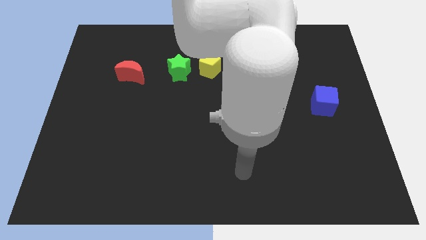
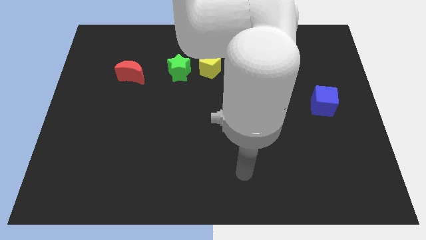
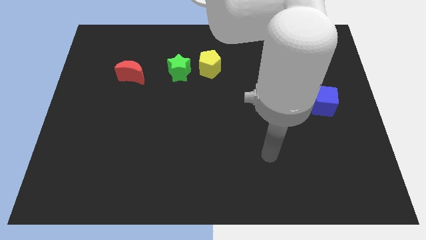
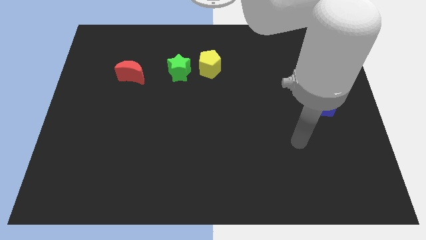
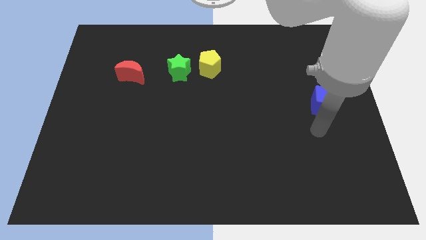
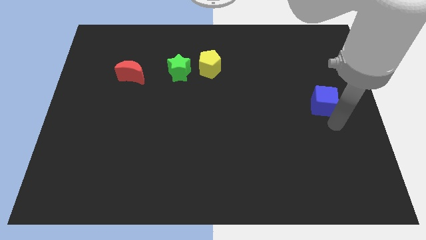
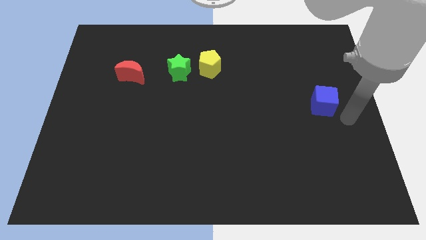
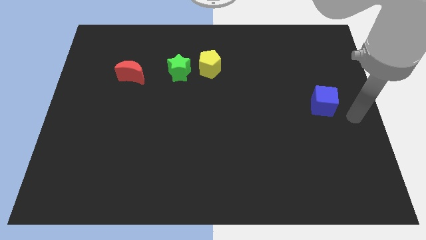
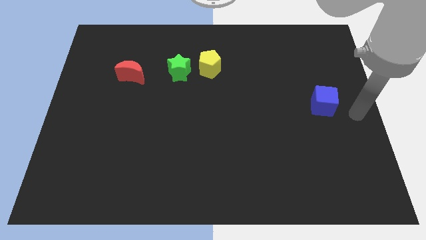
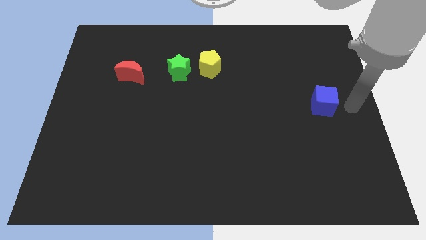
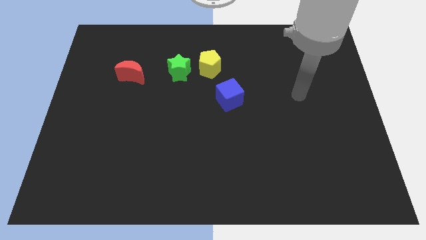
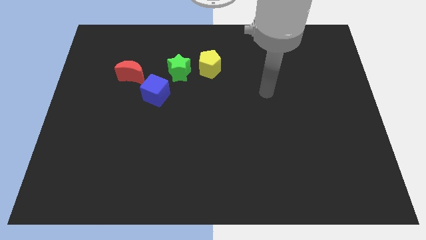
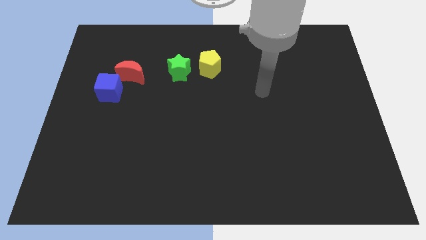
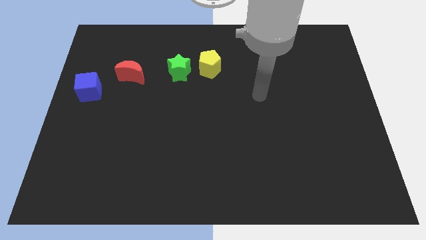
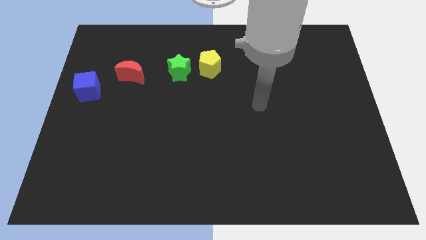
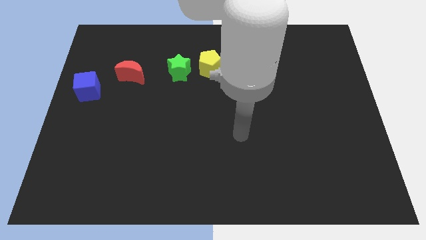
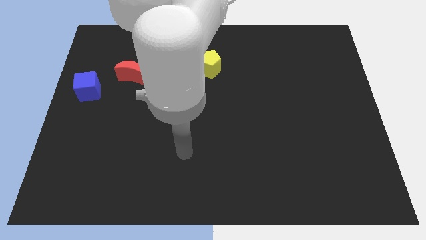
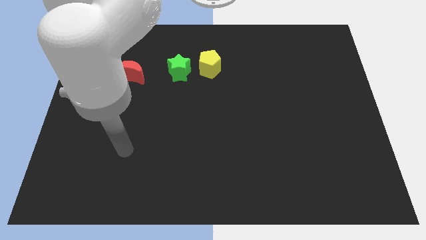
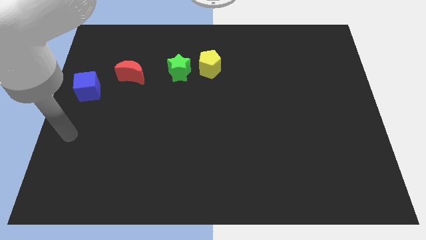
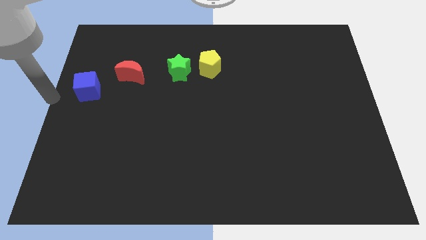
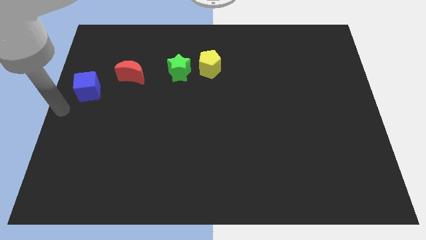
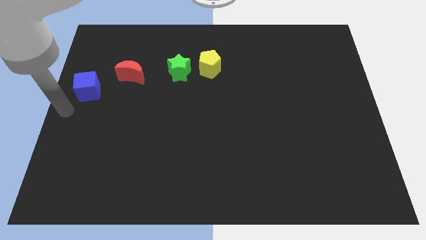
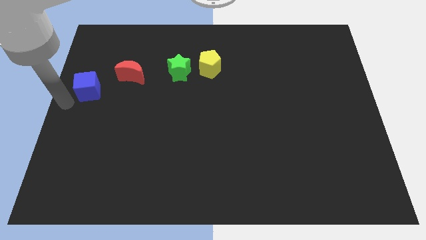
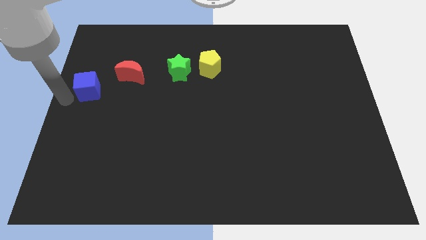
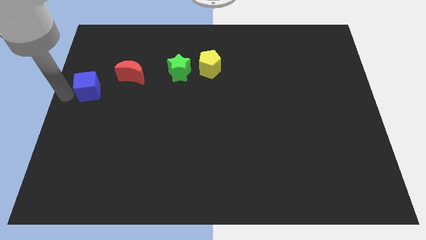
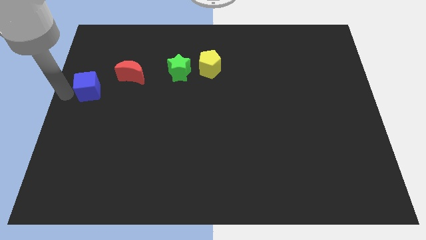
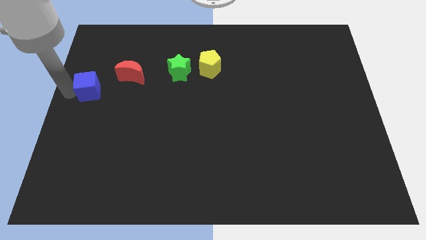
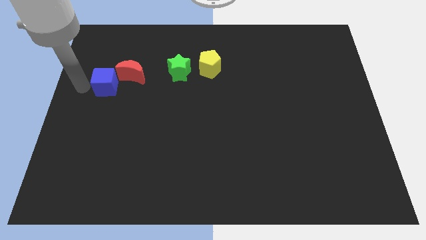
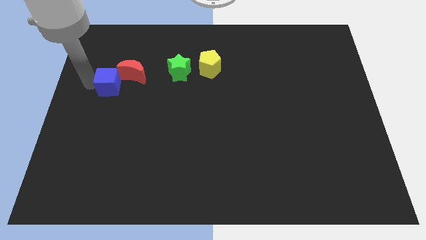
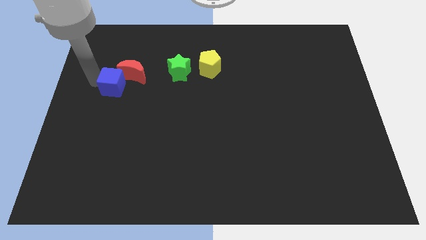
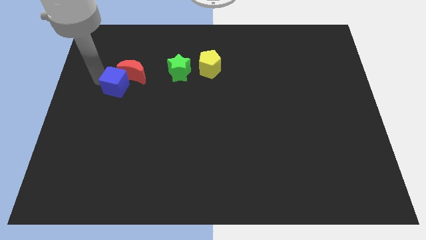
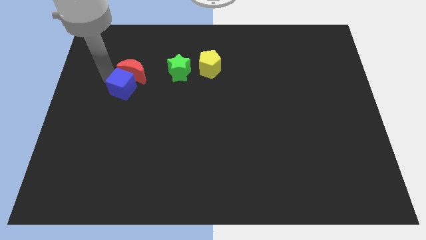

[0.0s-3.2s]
push the blue cube next to the red moon

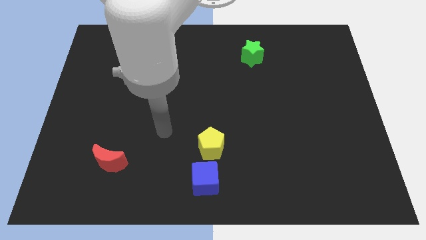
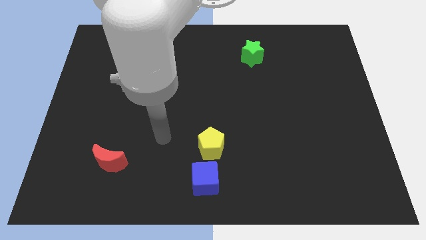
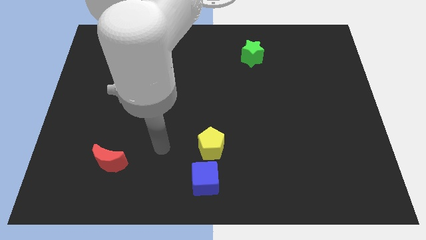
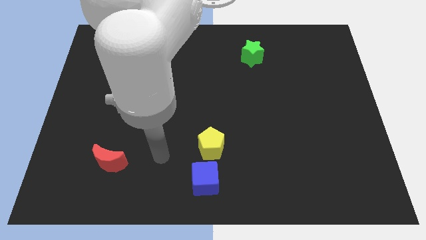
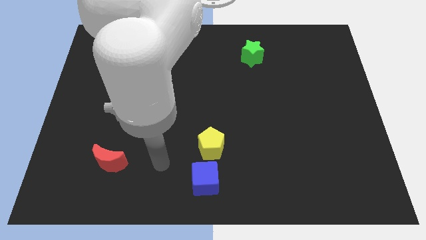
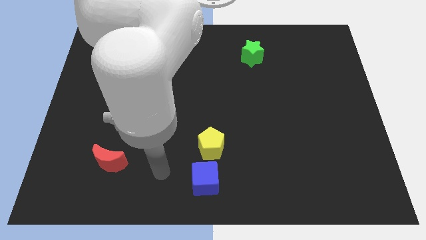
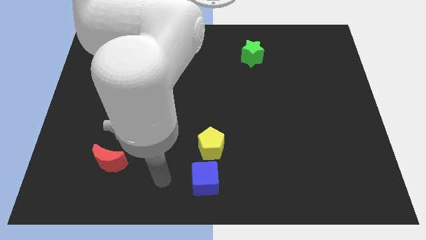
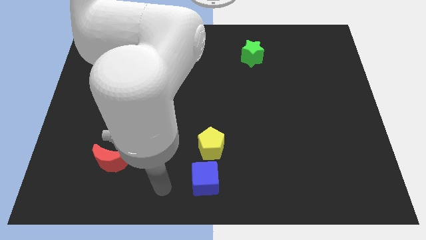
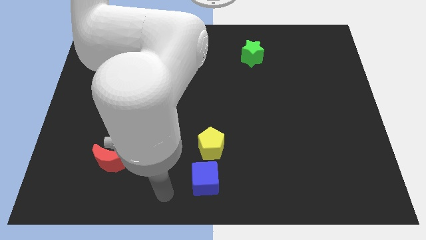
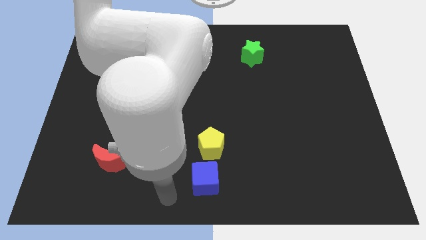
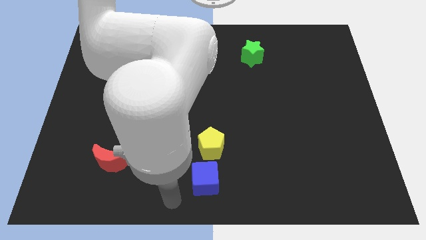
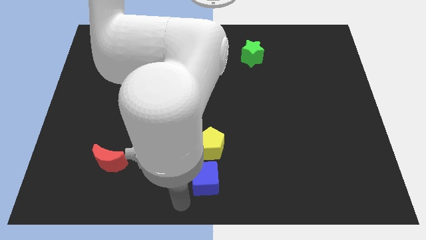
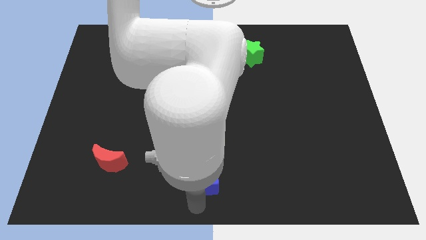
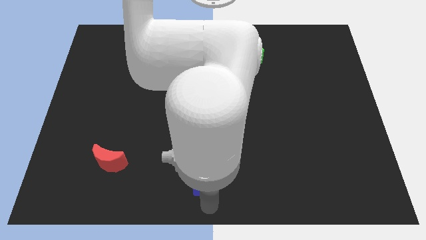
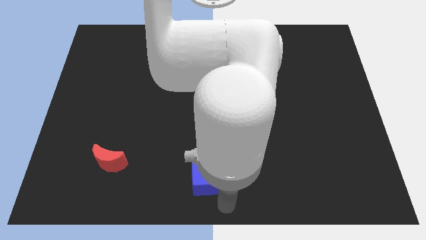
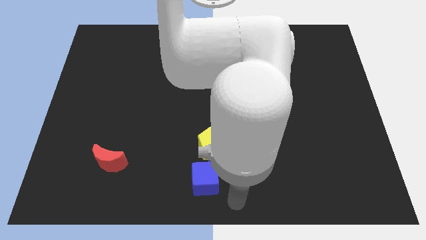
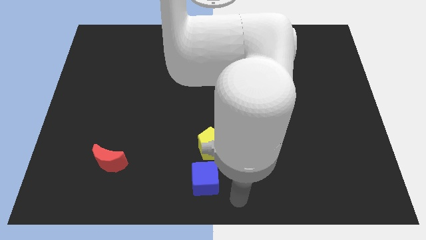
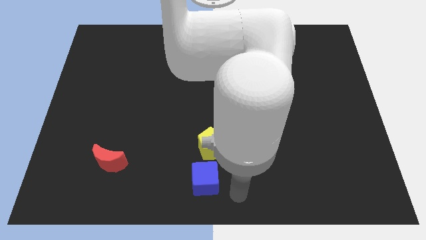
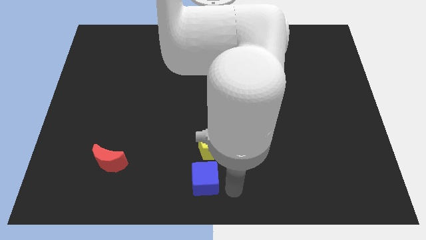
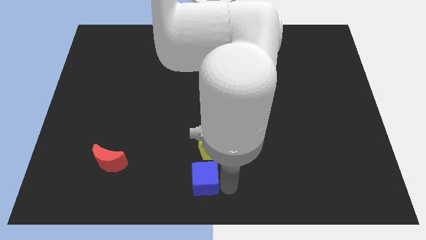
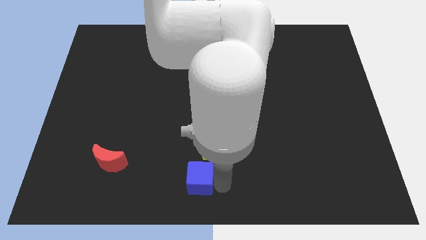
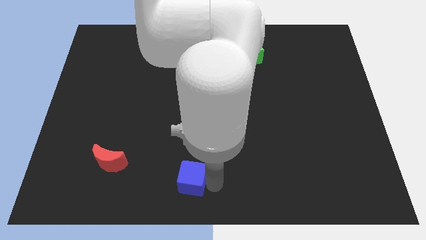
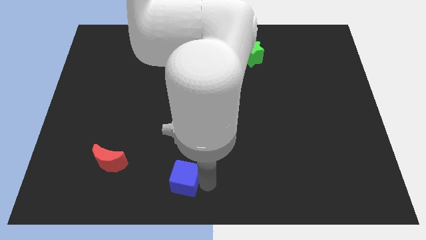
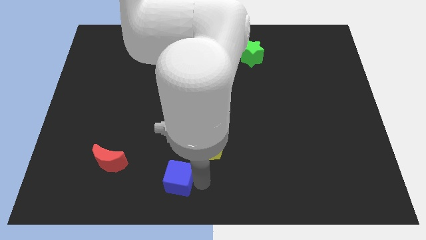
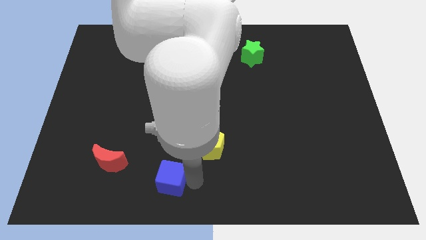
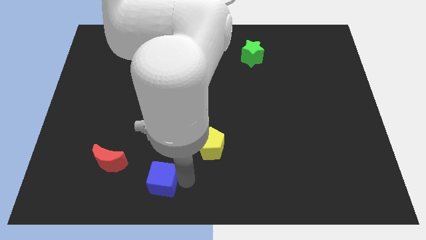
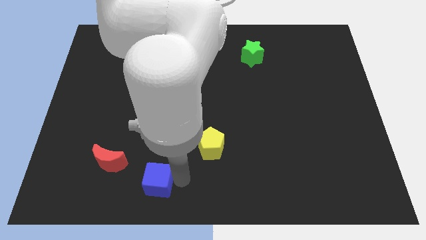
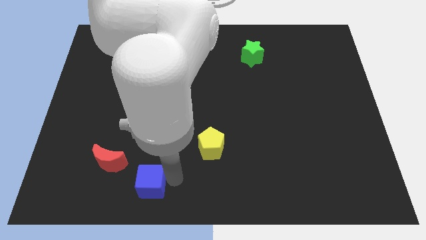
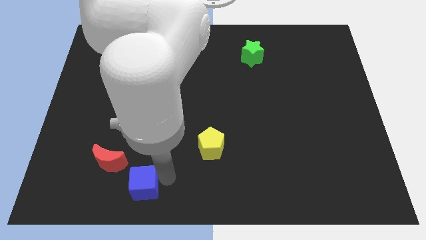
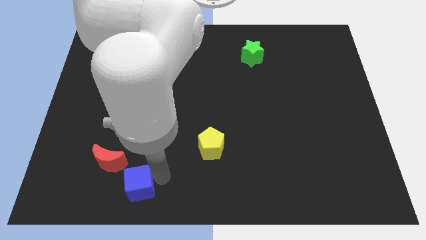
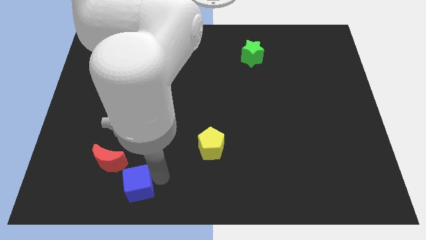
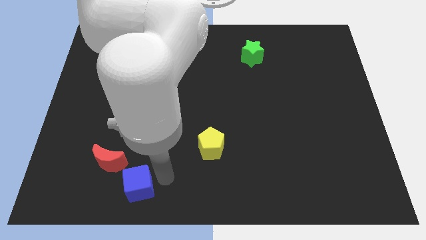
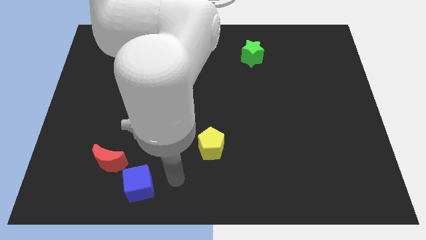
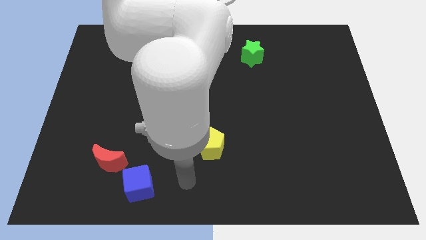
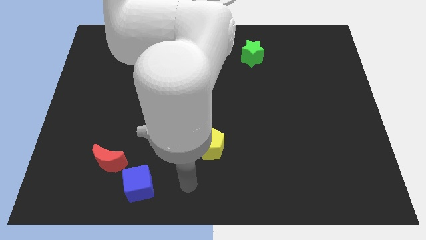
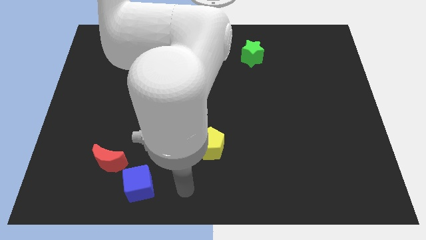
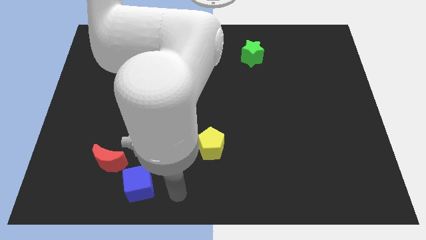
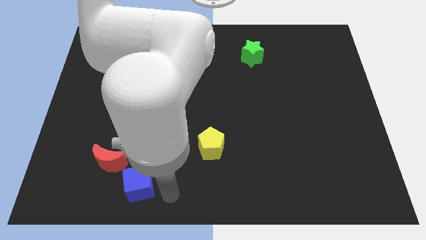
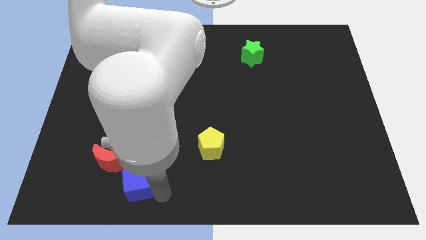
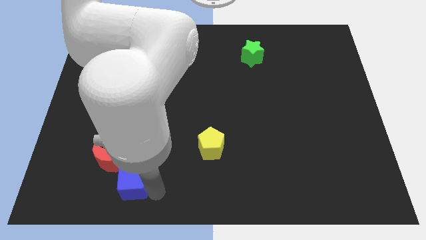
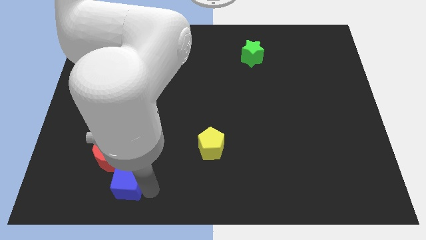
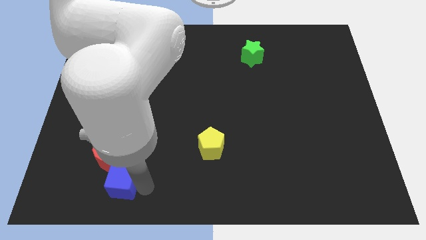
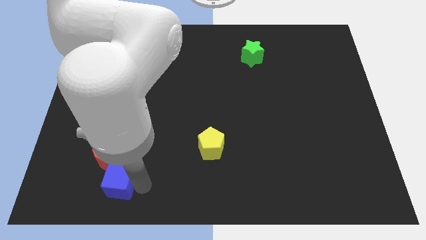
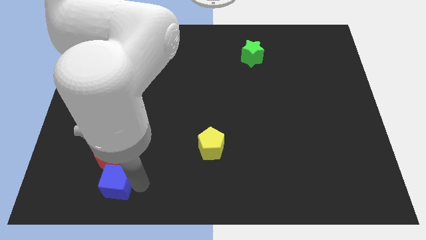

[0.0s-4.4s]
slide the blue cube towards the moon

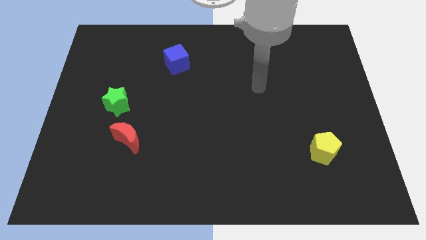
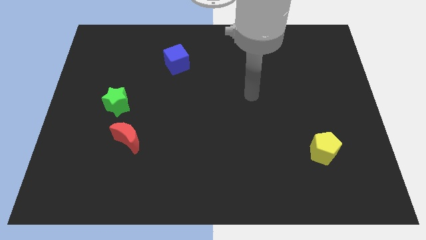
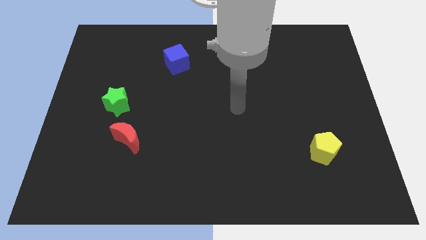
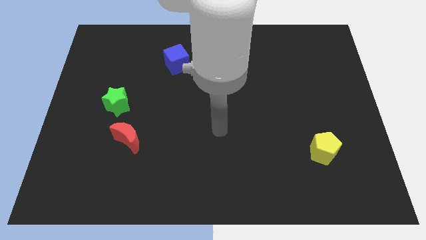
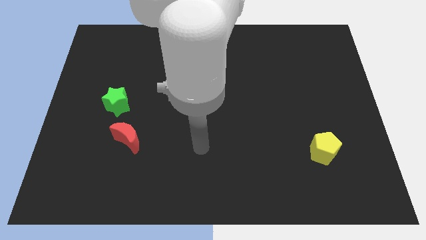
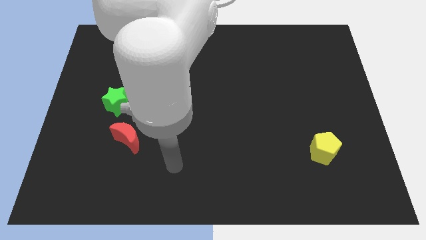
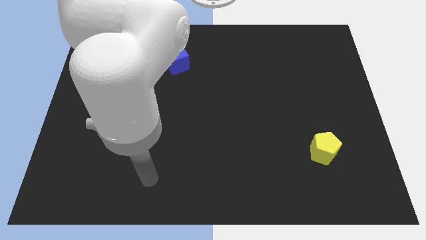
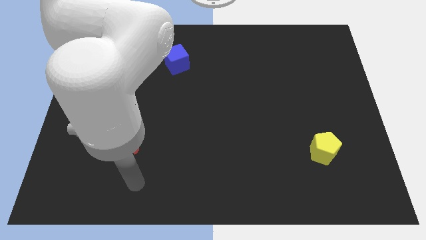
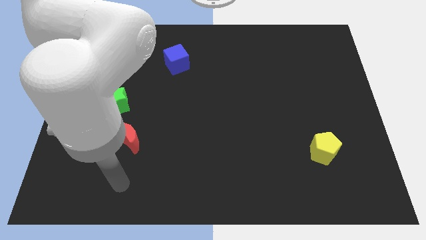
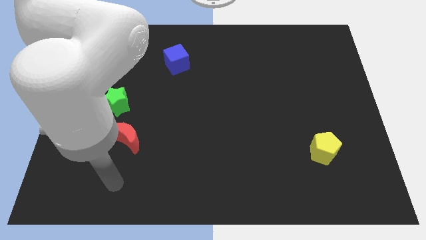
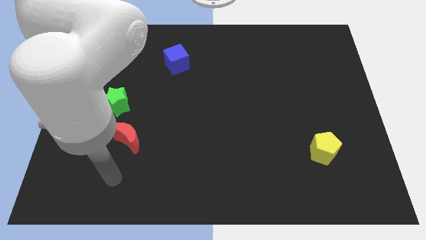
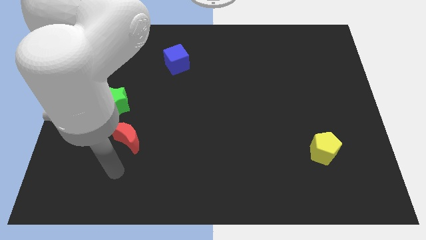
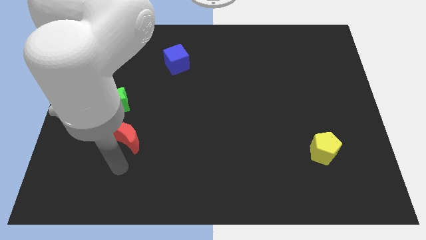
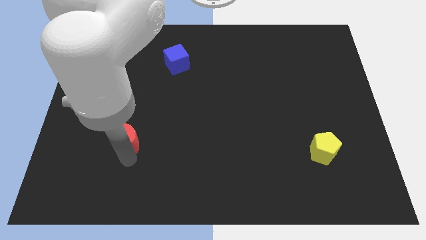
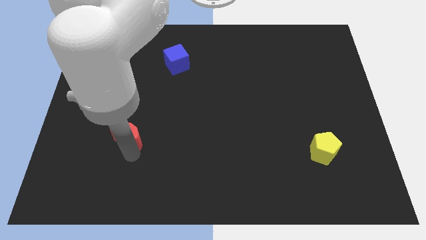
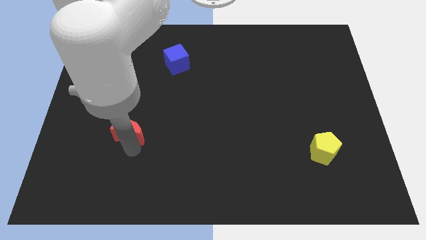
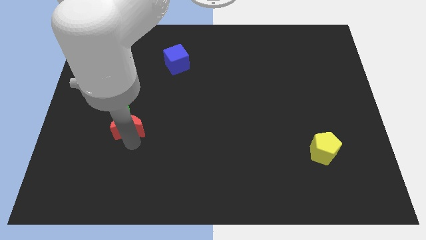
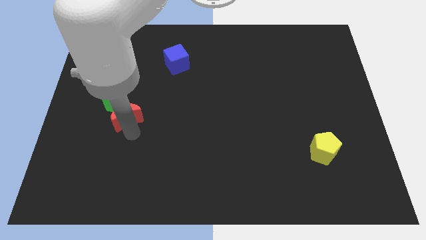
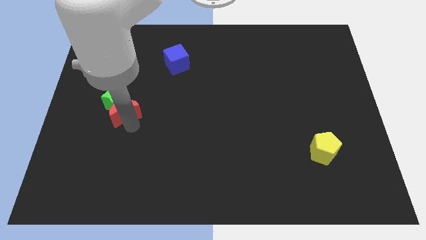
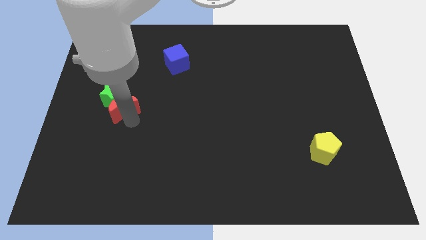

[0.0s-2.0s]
push the red moon towards the star
